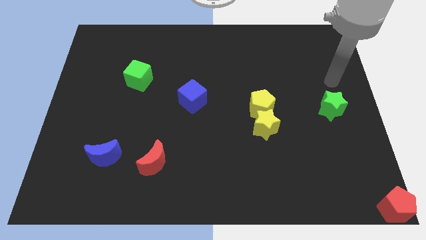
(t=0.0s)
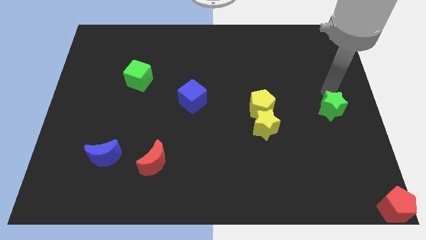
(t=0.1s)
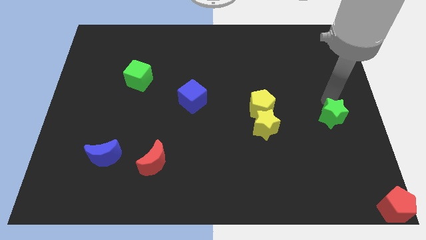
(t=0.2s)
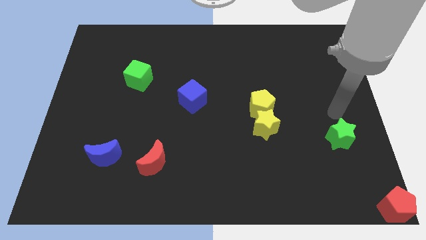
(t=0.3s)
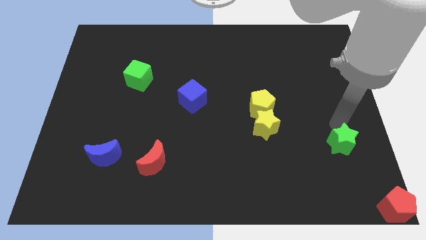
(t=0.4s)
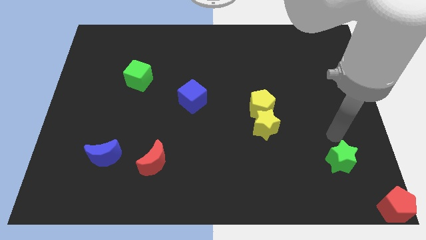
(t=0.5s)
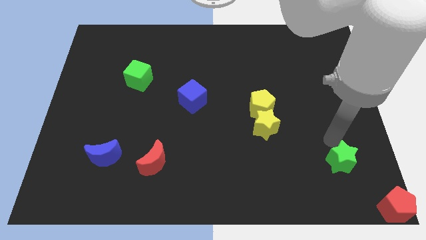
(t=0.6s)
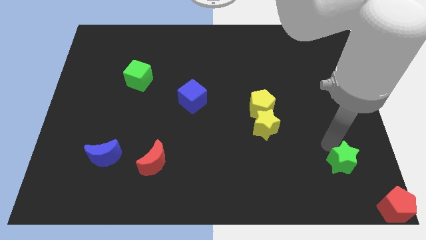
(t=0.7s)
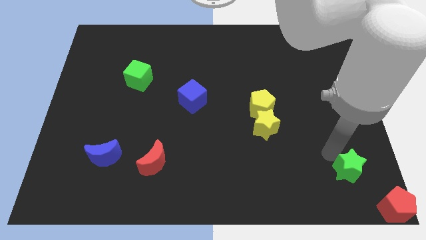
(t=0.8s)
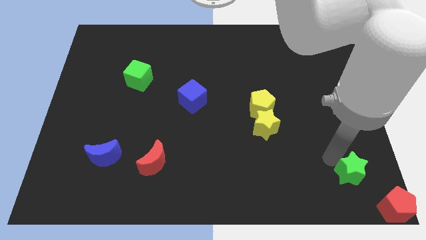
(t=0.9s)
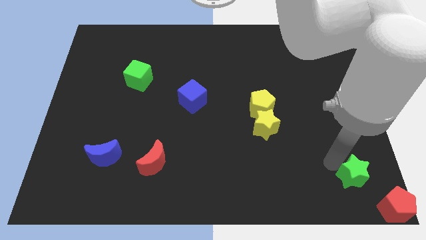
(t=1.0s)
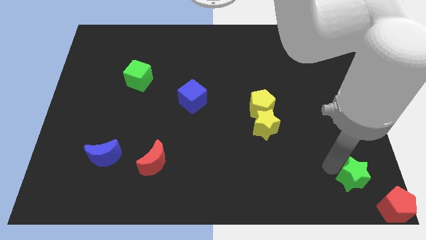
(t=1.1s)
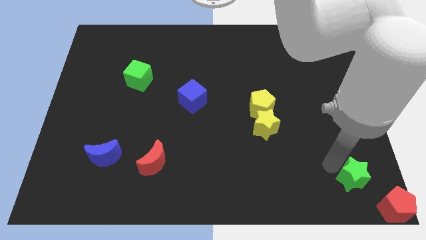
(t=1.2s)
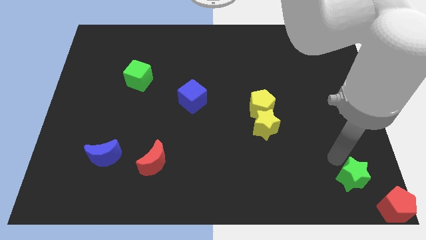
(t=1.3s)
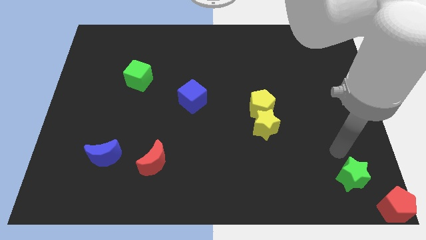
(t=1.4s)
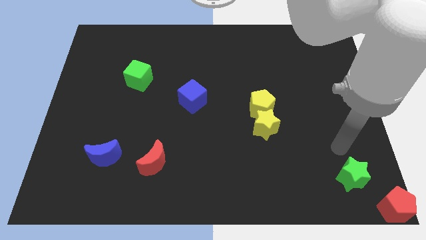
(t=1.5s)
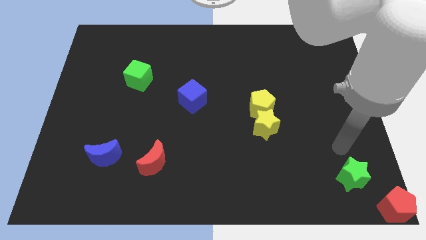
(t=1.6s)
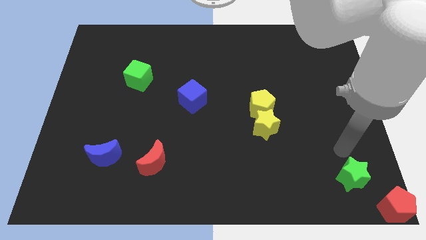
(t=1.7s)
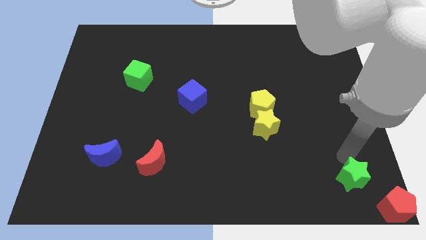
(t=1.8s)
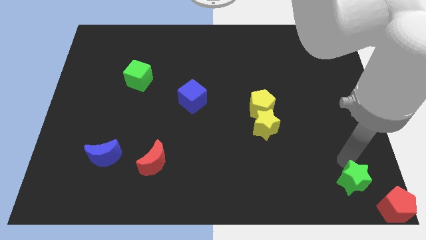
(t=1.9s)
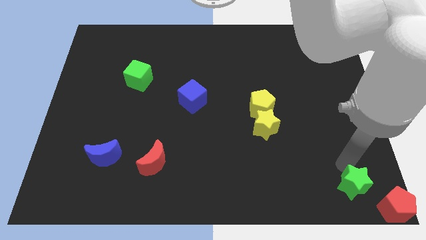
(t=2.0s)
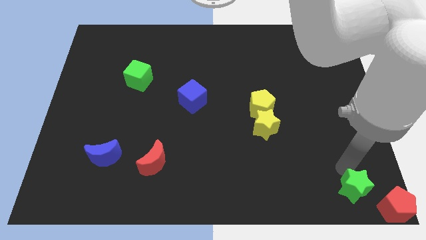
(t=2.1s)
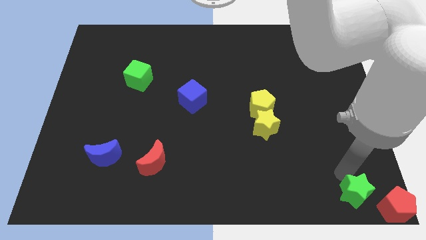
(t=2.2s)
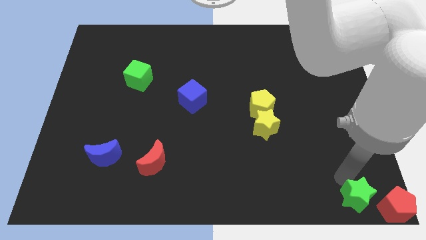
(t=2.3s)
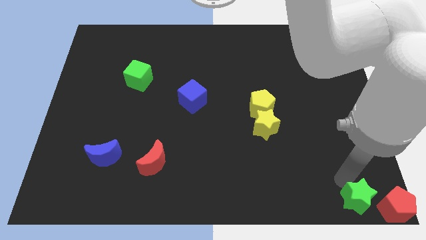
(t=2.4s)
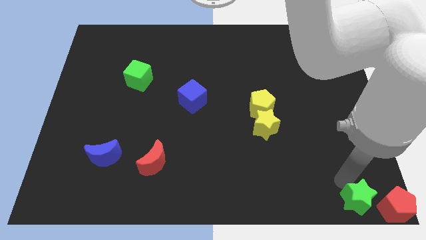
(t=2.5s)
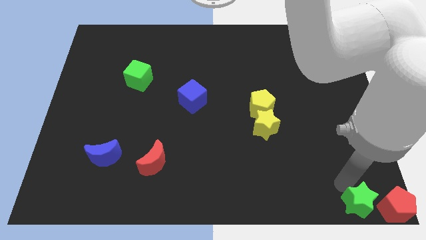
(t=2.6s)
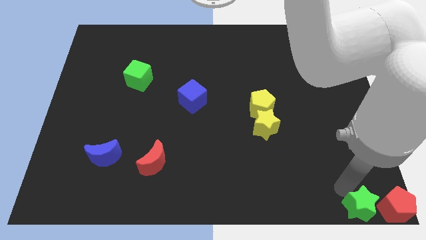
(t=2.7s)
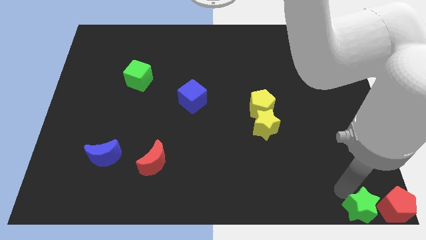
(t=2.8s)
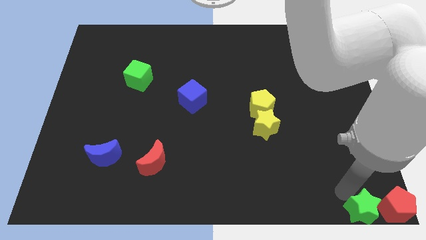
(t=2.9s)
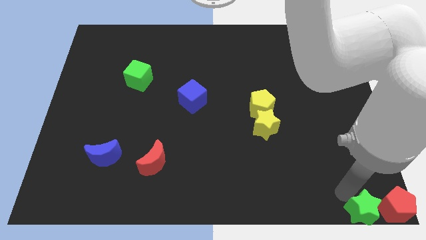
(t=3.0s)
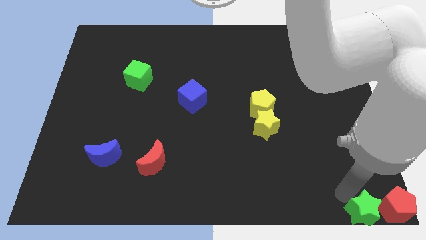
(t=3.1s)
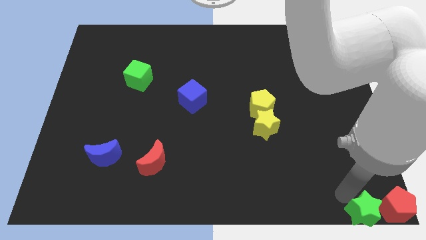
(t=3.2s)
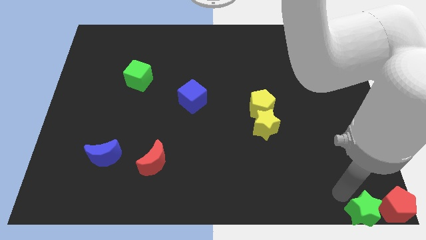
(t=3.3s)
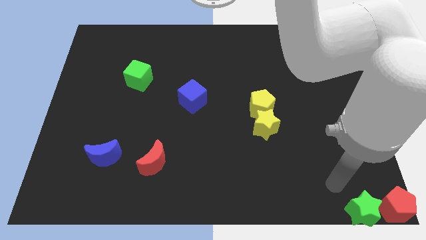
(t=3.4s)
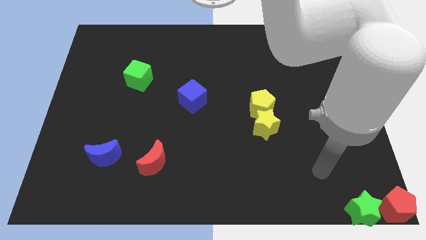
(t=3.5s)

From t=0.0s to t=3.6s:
push the green star to the left of the red pentagon

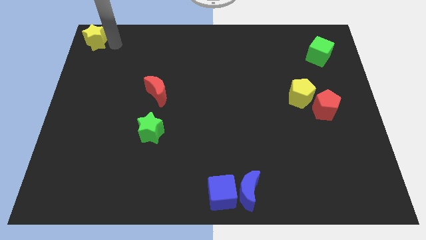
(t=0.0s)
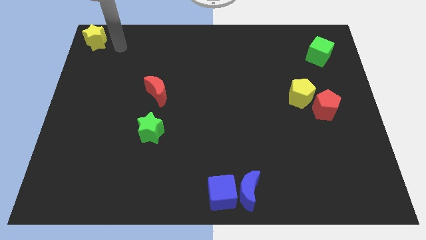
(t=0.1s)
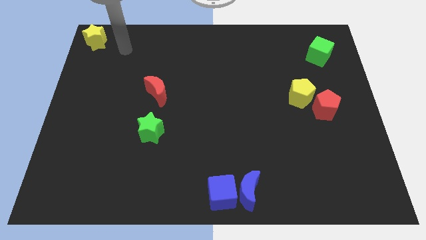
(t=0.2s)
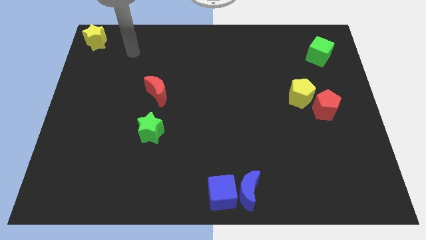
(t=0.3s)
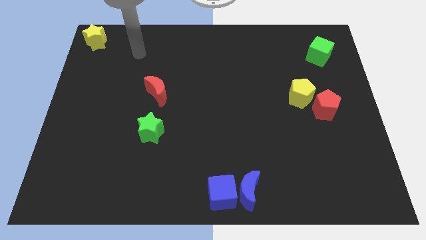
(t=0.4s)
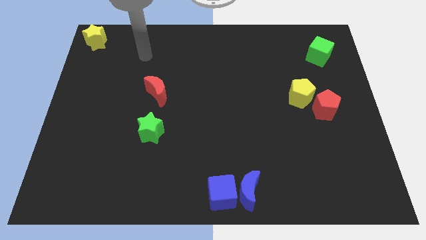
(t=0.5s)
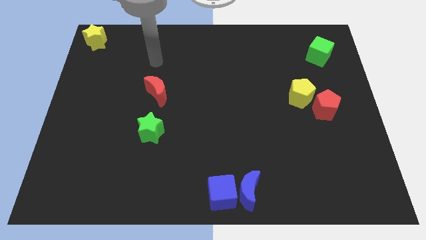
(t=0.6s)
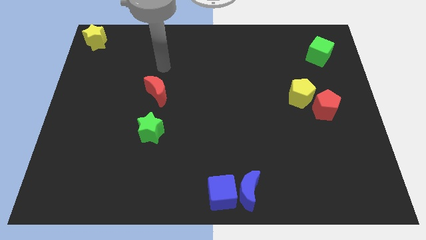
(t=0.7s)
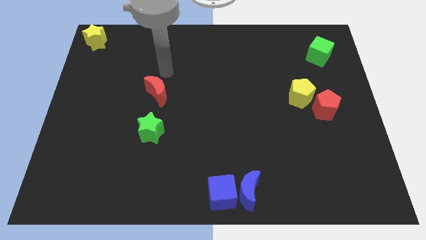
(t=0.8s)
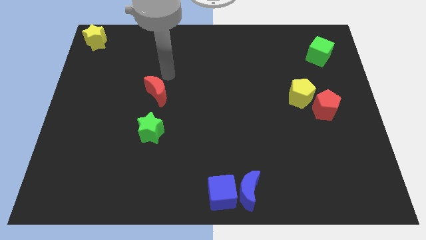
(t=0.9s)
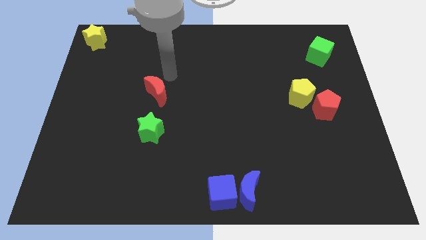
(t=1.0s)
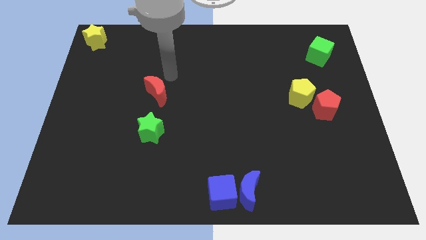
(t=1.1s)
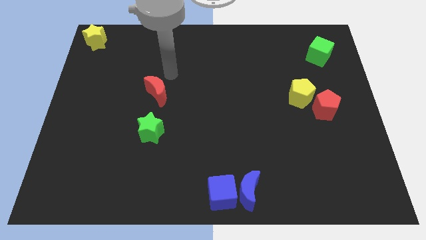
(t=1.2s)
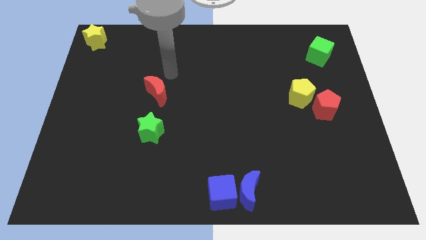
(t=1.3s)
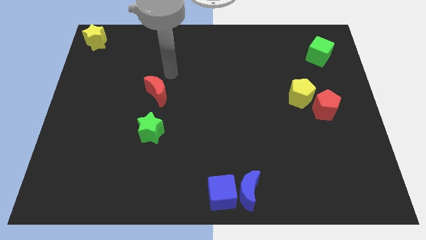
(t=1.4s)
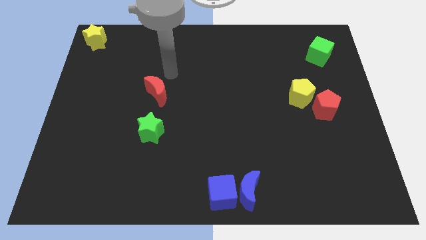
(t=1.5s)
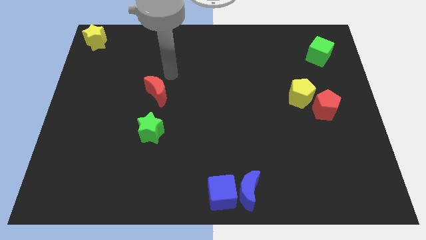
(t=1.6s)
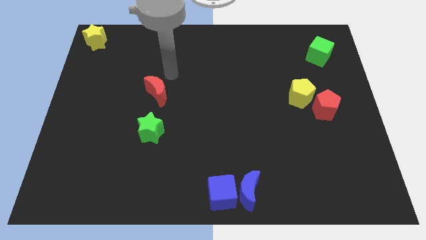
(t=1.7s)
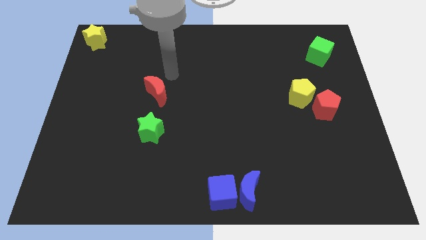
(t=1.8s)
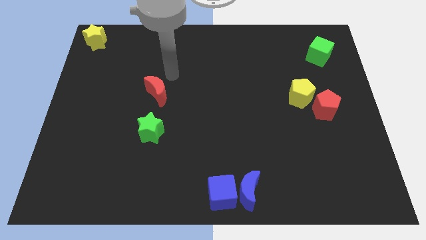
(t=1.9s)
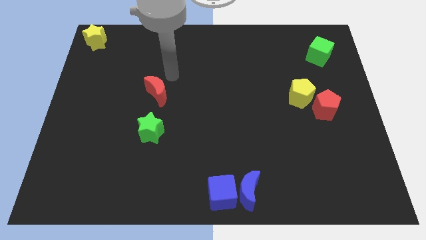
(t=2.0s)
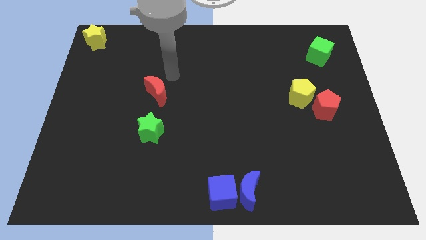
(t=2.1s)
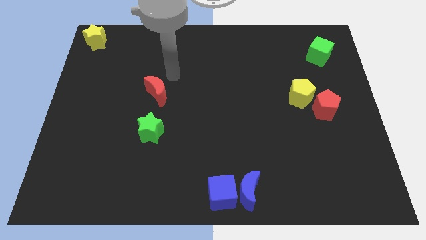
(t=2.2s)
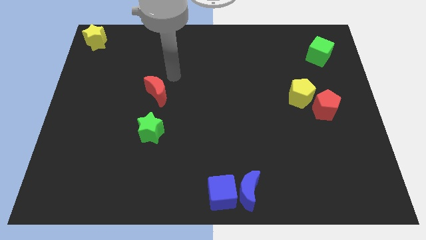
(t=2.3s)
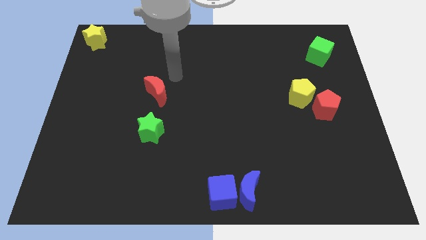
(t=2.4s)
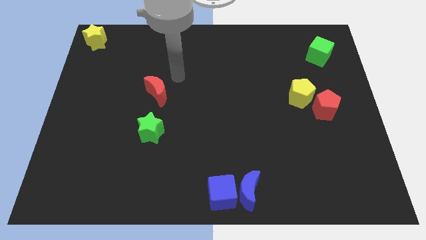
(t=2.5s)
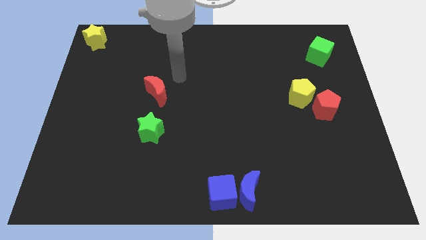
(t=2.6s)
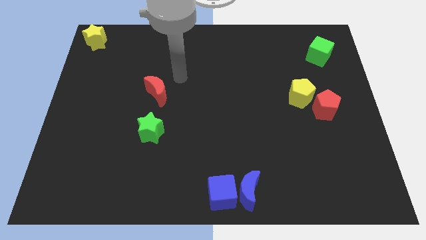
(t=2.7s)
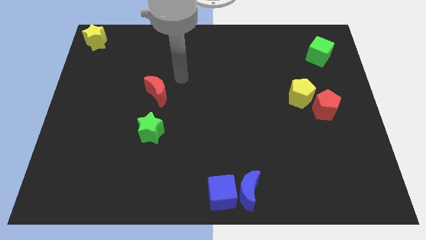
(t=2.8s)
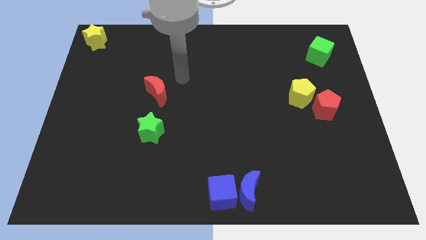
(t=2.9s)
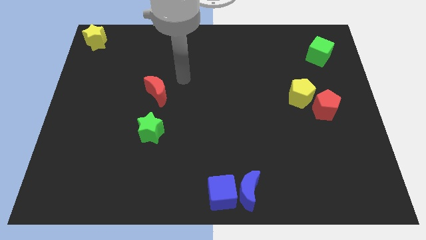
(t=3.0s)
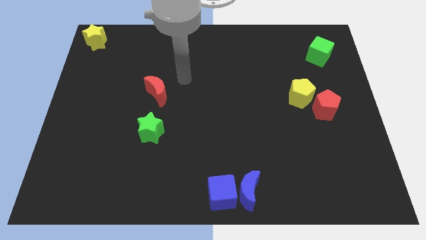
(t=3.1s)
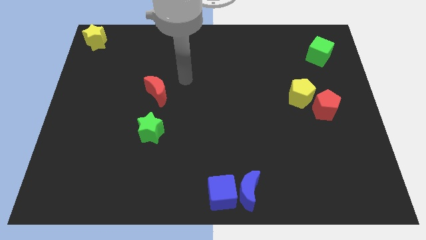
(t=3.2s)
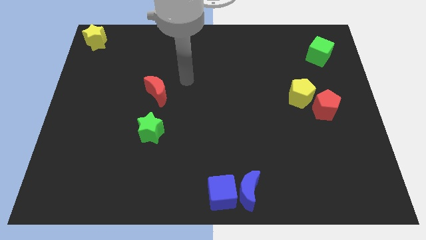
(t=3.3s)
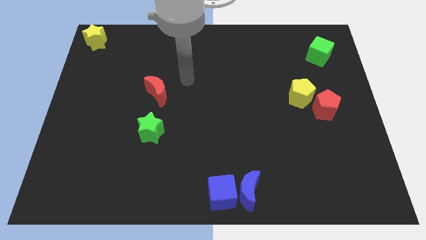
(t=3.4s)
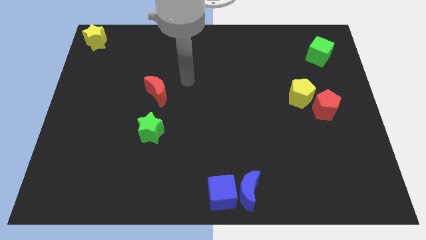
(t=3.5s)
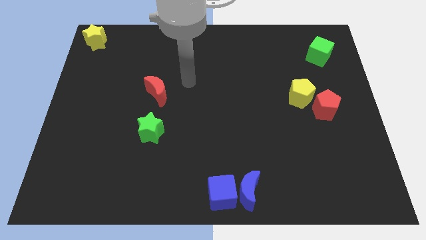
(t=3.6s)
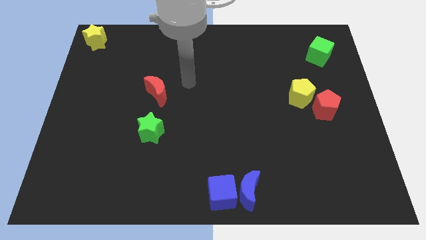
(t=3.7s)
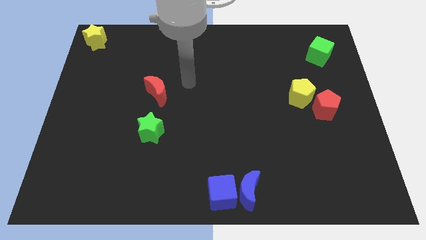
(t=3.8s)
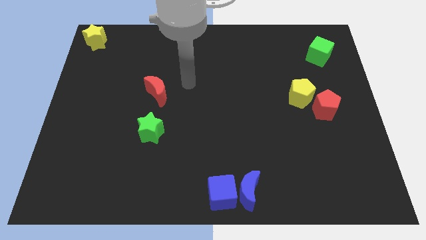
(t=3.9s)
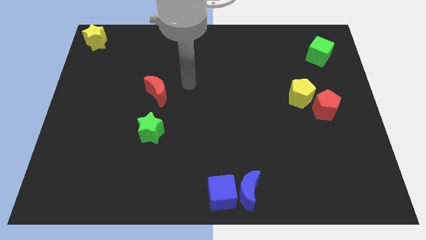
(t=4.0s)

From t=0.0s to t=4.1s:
drag your arm to the center of the board

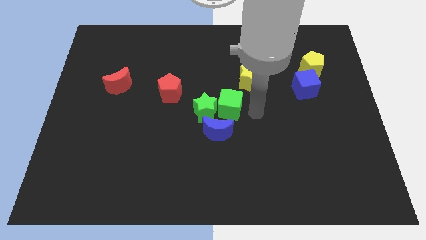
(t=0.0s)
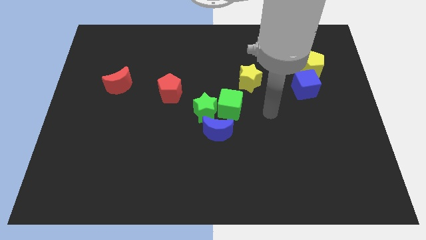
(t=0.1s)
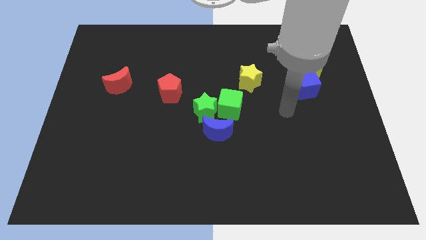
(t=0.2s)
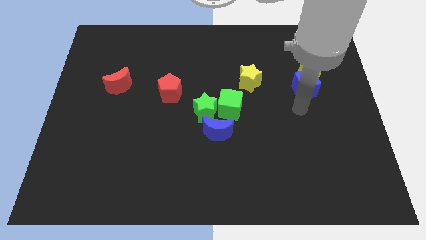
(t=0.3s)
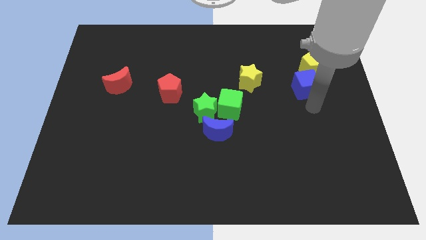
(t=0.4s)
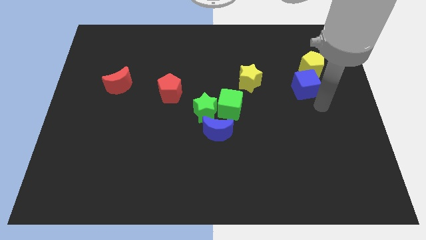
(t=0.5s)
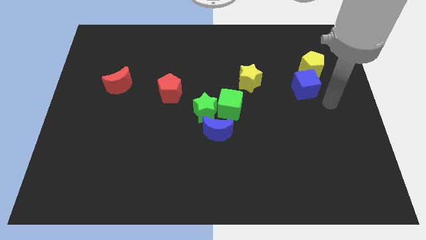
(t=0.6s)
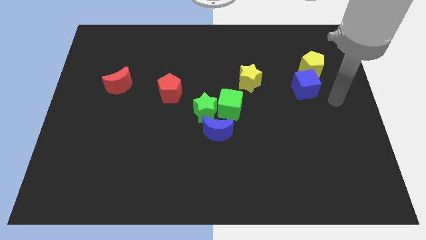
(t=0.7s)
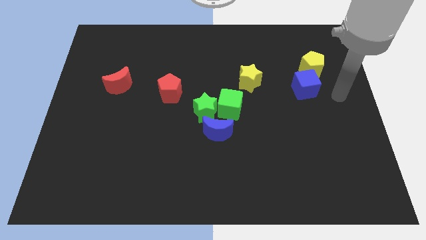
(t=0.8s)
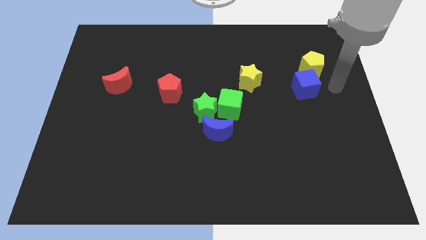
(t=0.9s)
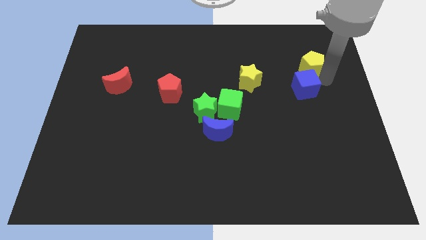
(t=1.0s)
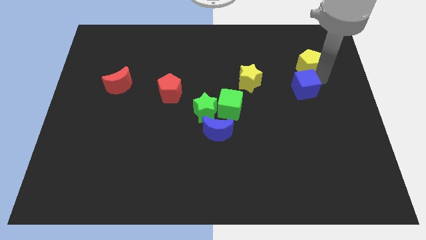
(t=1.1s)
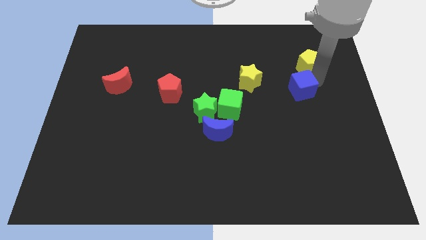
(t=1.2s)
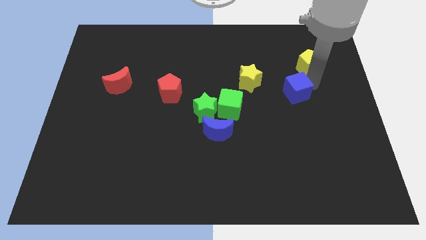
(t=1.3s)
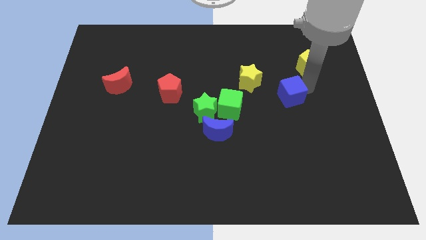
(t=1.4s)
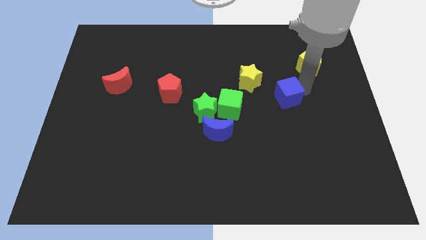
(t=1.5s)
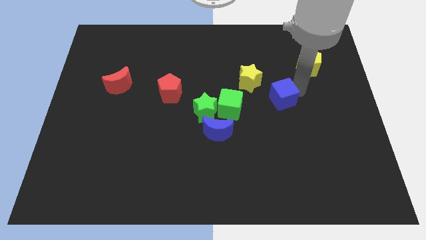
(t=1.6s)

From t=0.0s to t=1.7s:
move your arm away from green cube touch blue cube
